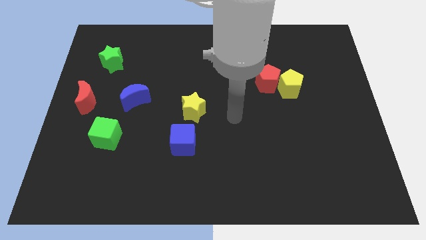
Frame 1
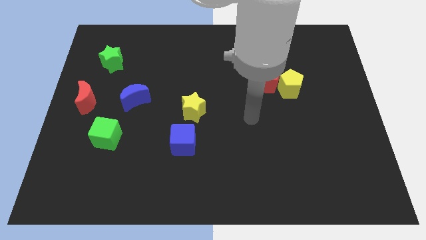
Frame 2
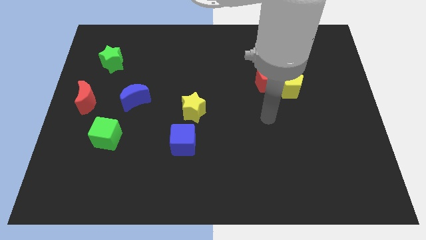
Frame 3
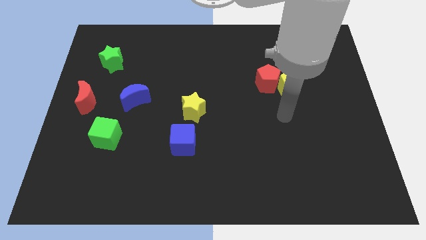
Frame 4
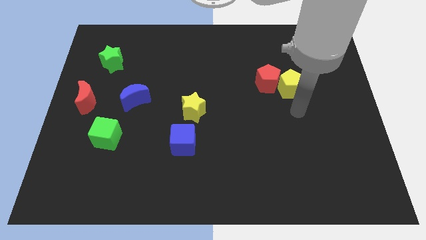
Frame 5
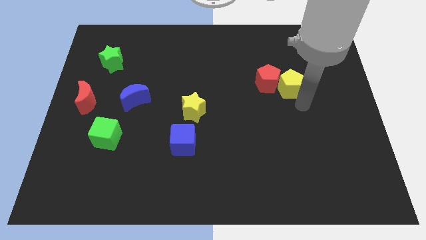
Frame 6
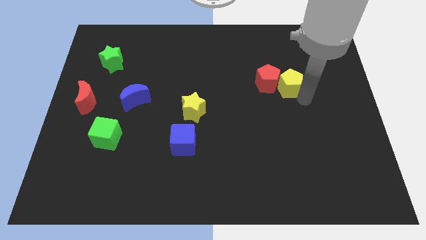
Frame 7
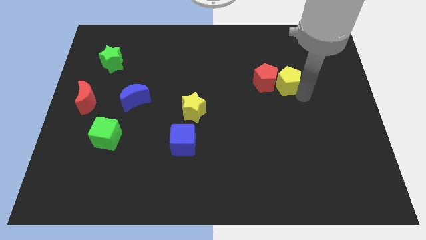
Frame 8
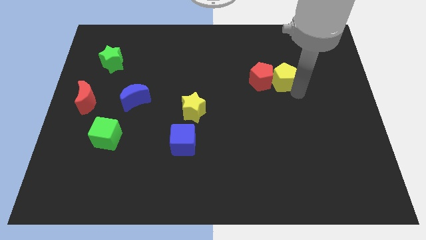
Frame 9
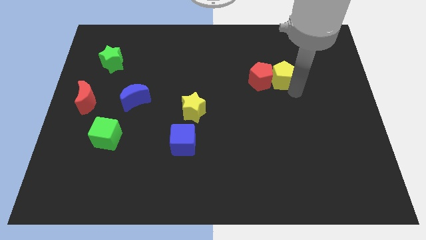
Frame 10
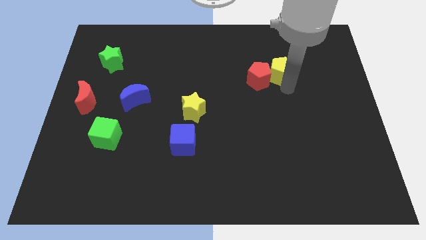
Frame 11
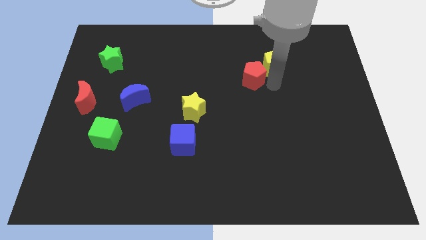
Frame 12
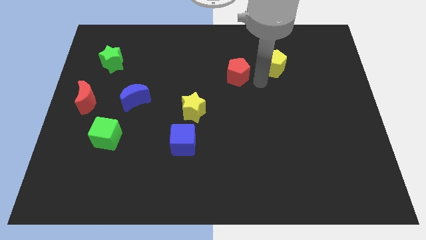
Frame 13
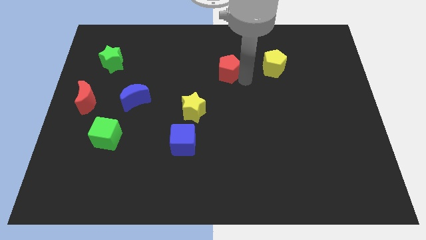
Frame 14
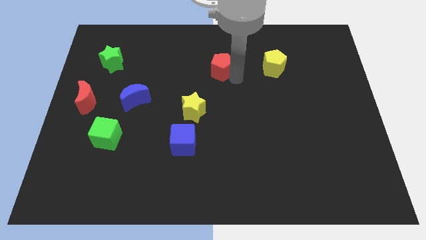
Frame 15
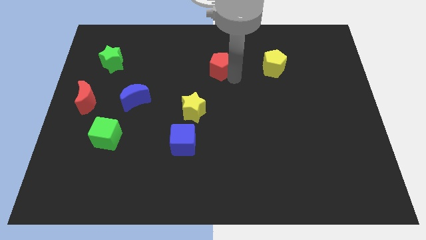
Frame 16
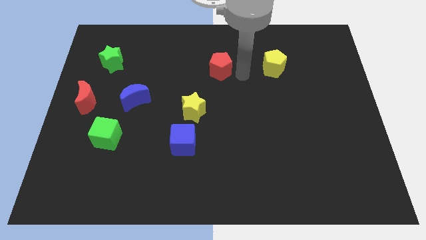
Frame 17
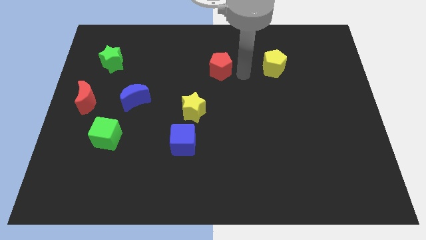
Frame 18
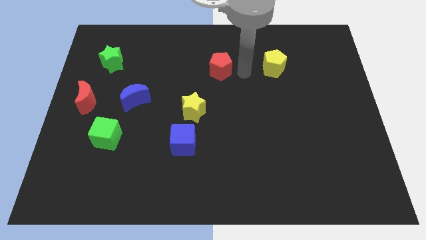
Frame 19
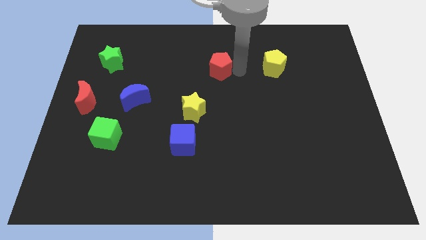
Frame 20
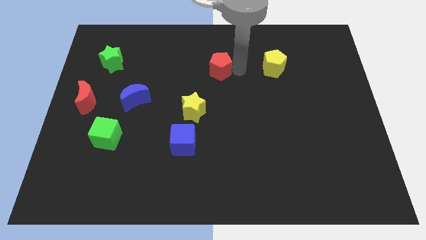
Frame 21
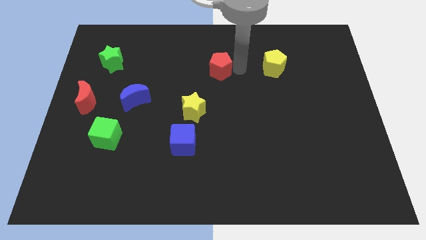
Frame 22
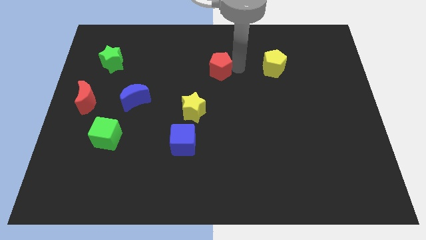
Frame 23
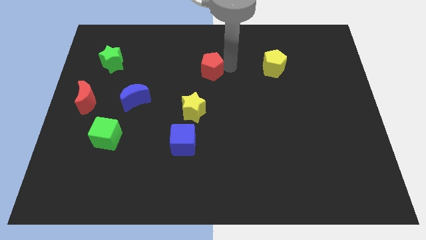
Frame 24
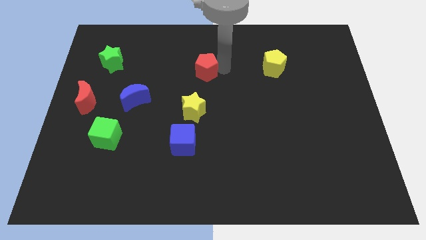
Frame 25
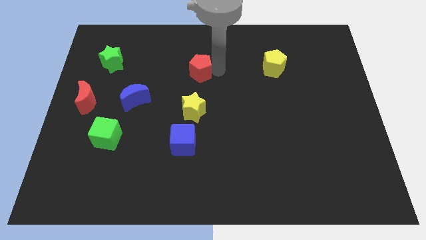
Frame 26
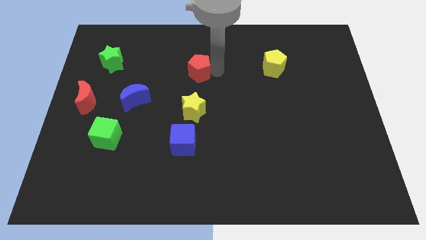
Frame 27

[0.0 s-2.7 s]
separate the red pentagon from the yellow pentagon

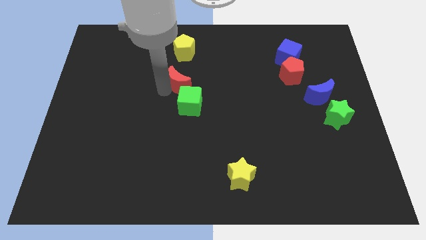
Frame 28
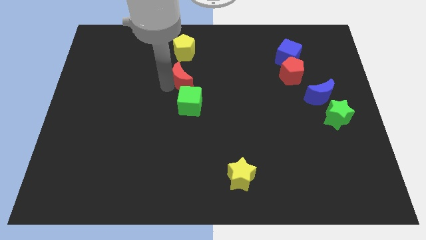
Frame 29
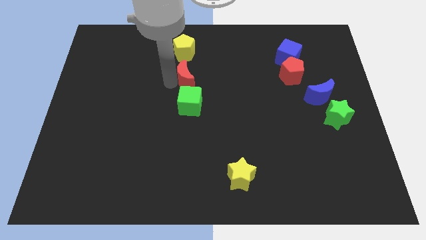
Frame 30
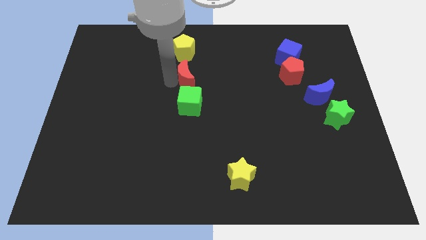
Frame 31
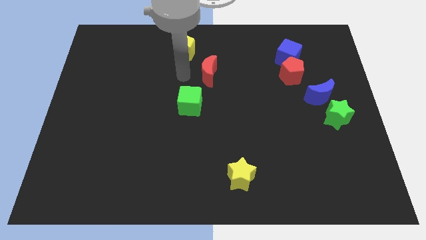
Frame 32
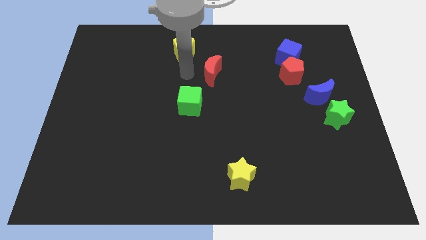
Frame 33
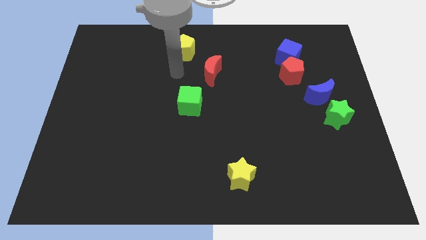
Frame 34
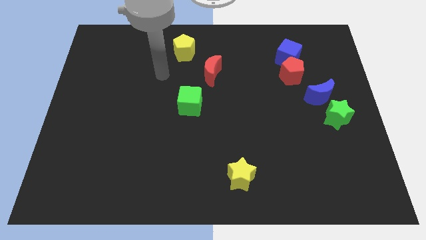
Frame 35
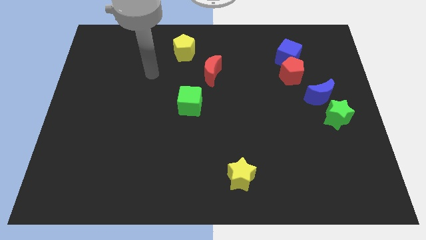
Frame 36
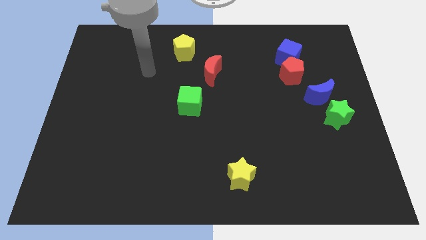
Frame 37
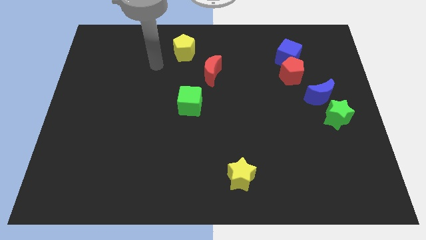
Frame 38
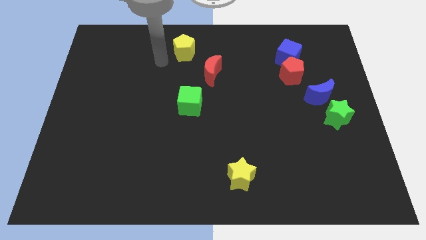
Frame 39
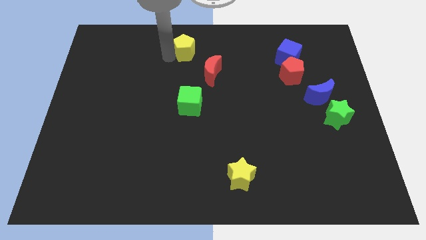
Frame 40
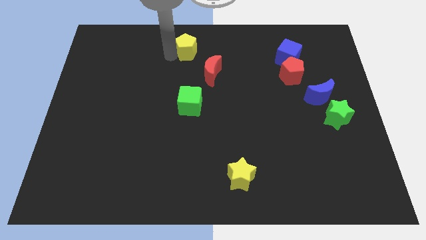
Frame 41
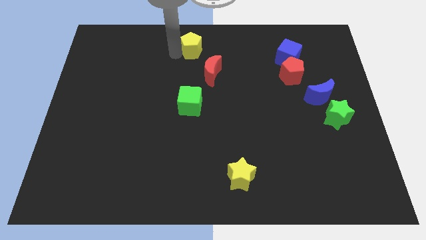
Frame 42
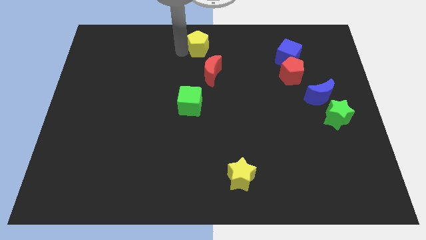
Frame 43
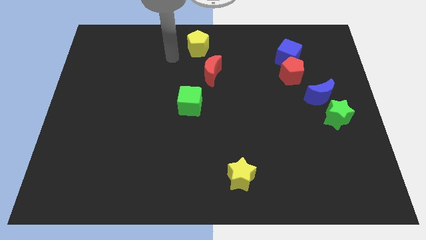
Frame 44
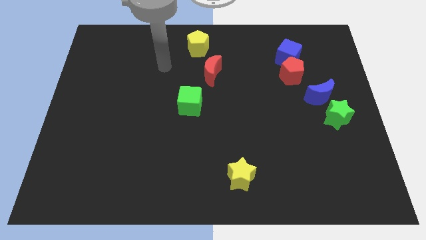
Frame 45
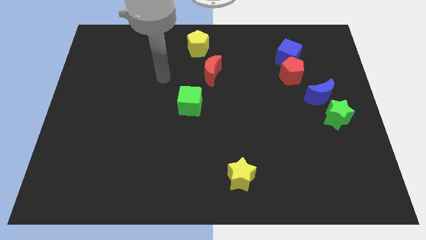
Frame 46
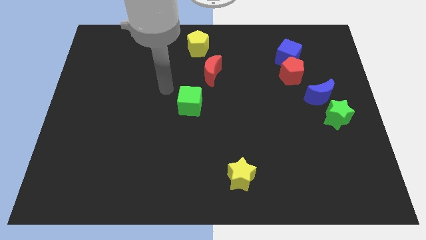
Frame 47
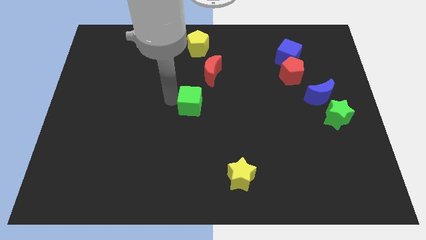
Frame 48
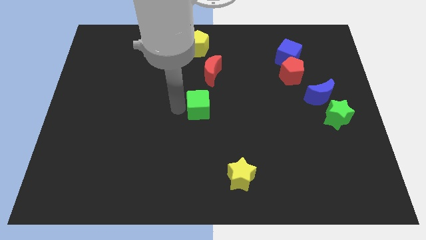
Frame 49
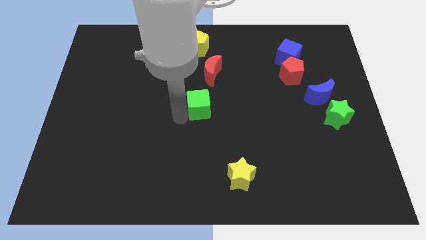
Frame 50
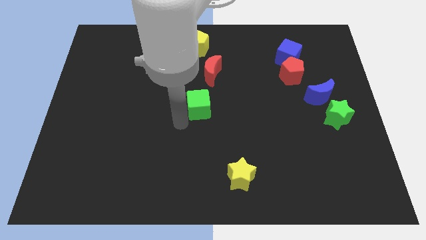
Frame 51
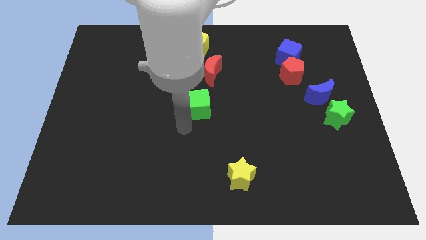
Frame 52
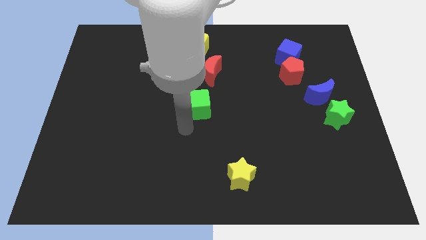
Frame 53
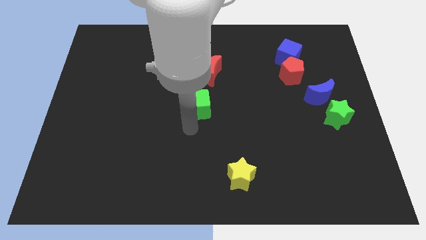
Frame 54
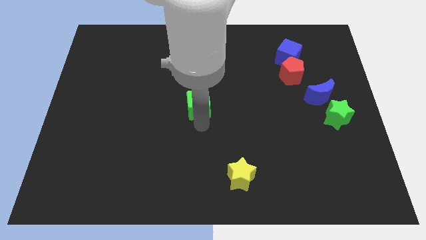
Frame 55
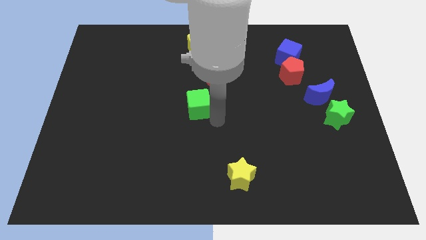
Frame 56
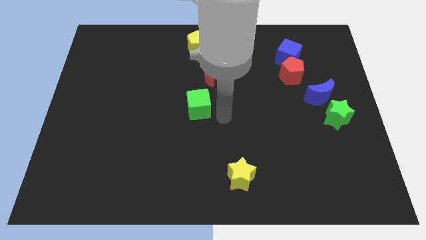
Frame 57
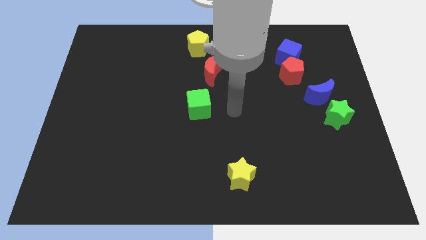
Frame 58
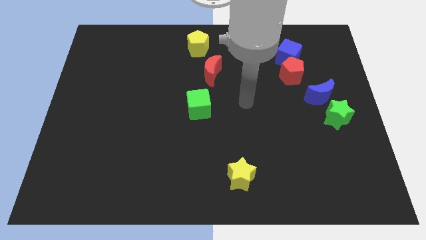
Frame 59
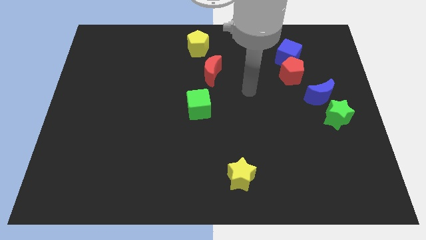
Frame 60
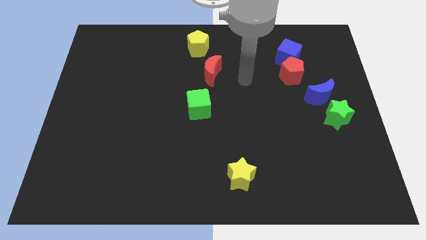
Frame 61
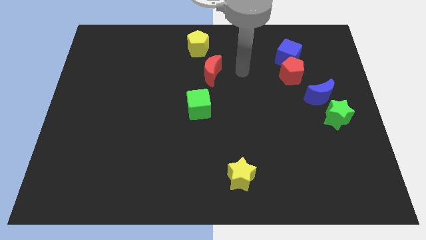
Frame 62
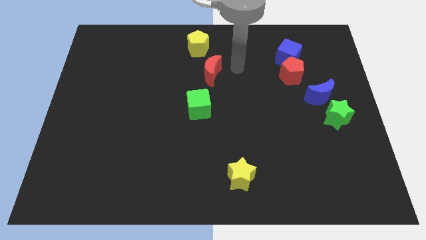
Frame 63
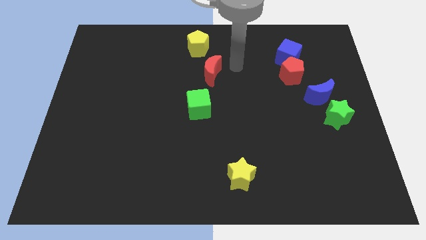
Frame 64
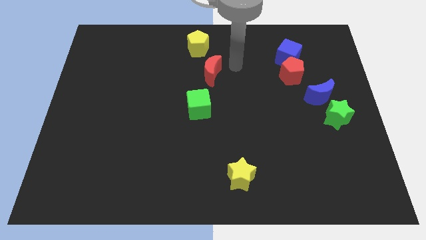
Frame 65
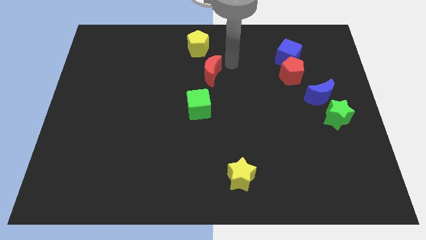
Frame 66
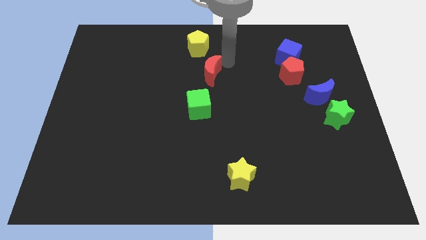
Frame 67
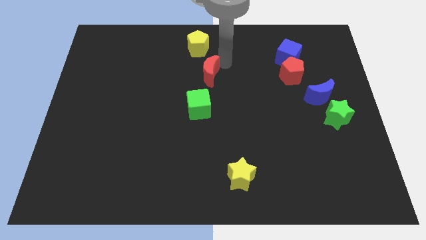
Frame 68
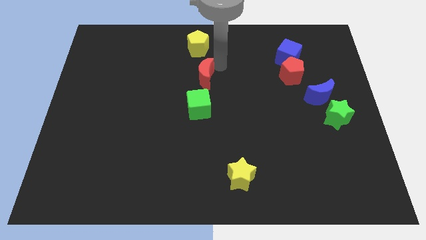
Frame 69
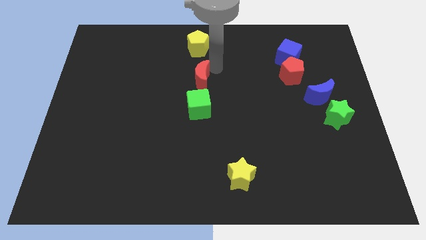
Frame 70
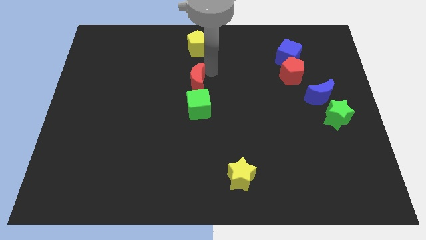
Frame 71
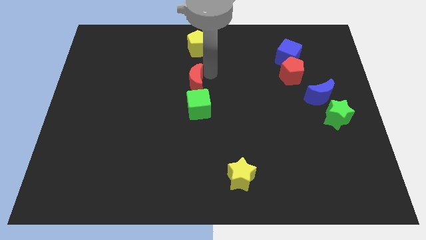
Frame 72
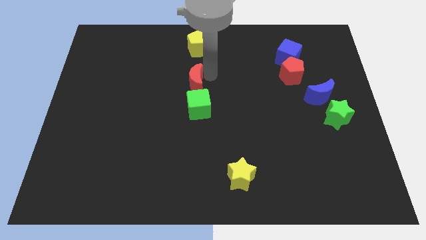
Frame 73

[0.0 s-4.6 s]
drag the red crescent towards the top of the green cube

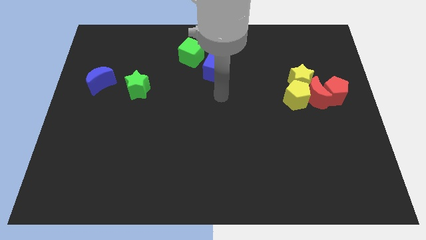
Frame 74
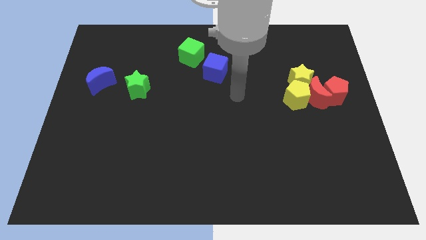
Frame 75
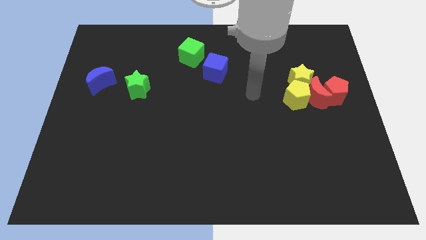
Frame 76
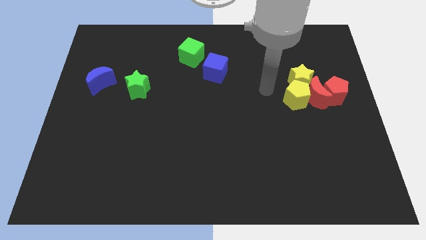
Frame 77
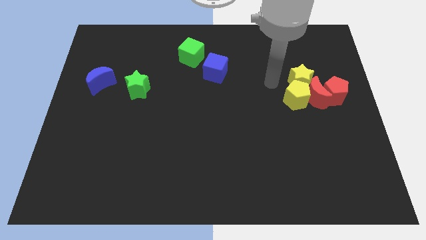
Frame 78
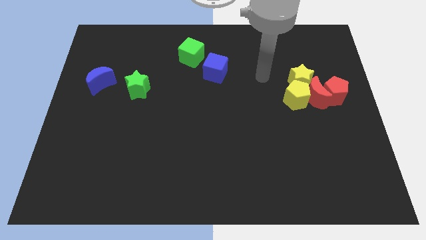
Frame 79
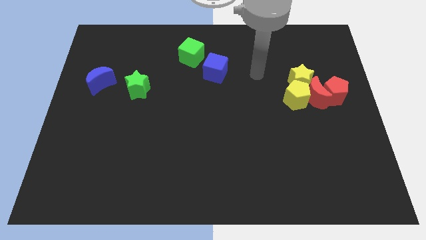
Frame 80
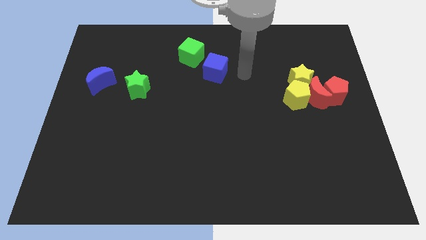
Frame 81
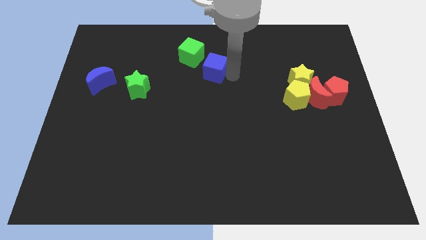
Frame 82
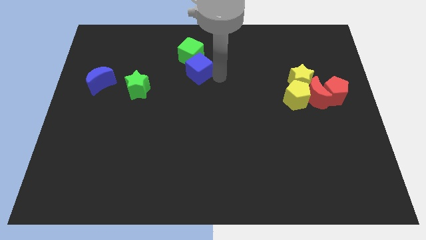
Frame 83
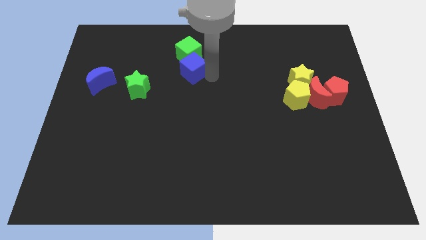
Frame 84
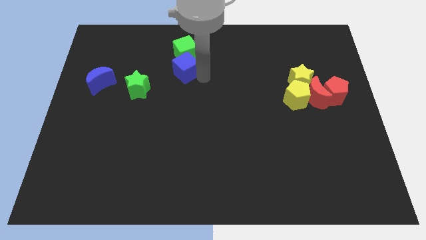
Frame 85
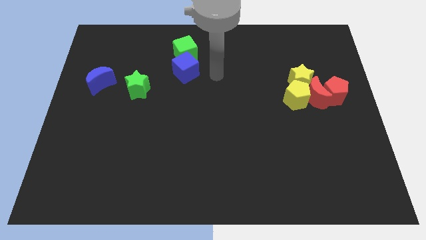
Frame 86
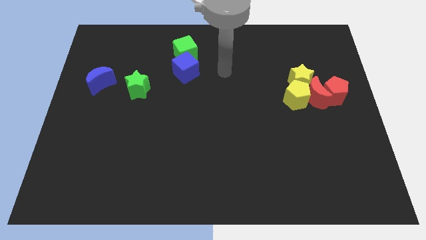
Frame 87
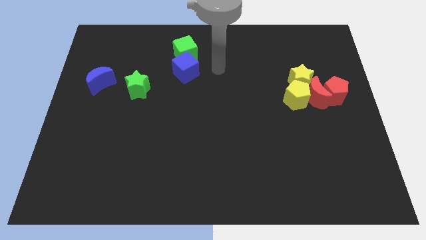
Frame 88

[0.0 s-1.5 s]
move the cubes slightly left

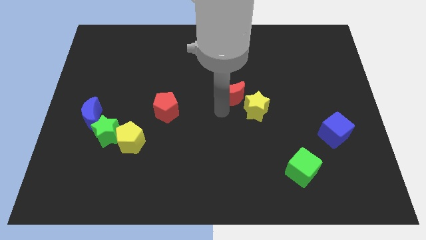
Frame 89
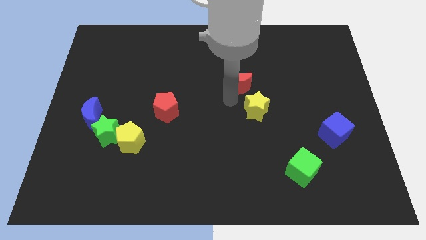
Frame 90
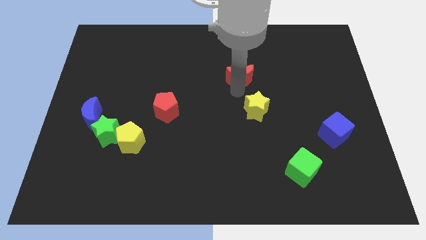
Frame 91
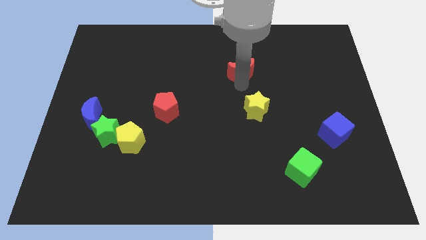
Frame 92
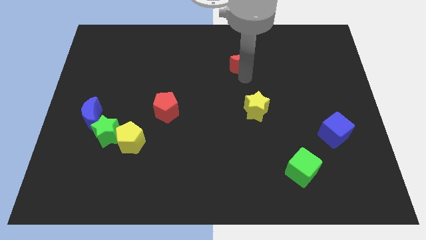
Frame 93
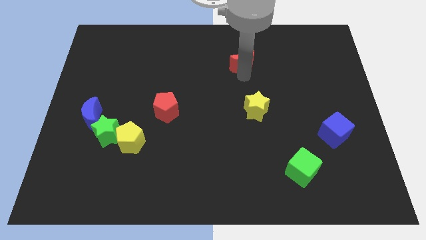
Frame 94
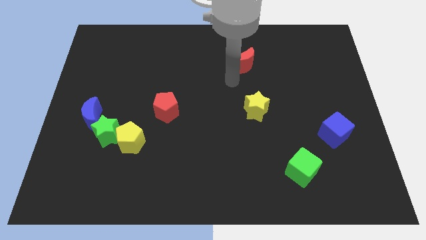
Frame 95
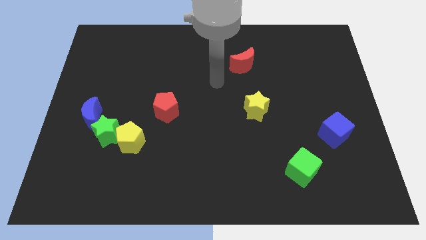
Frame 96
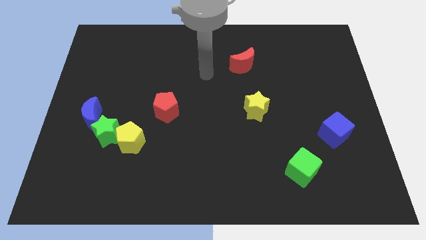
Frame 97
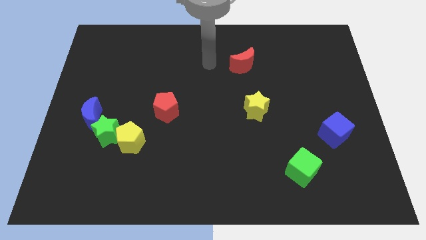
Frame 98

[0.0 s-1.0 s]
push the red crescent slightly upwards
